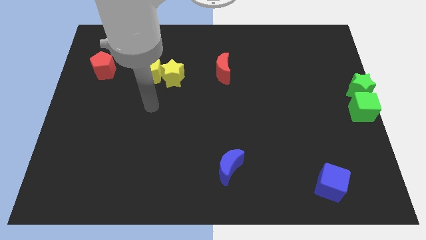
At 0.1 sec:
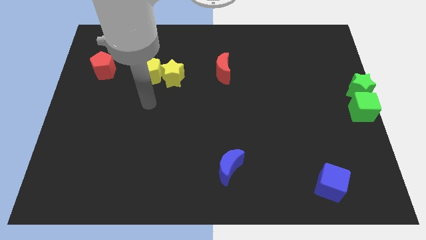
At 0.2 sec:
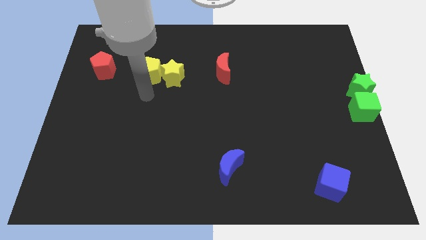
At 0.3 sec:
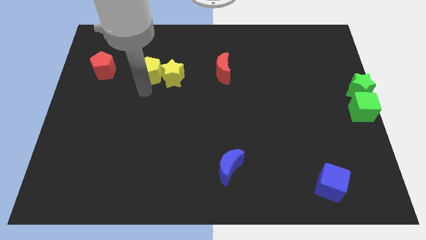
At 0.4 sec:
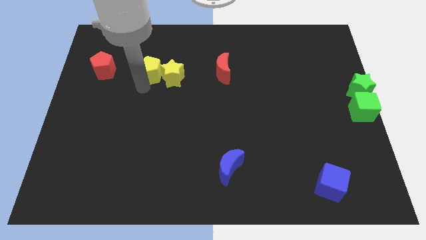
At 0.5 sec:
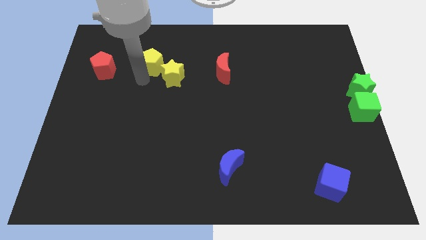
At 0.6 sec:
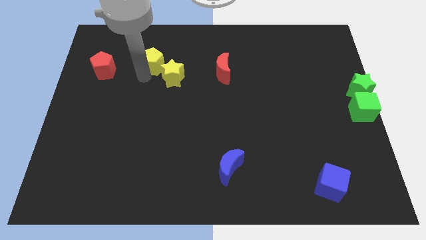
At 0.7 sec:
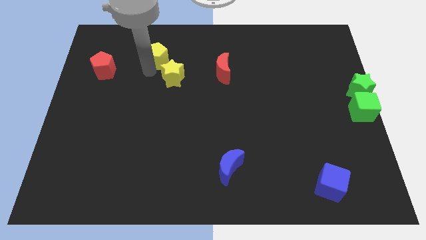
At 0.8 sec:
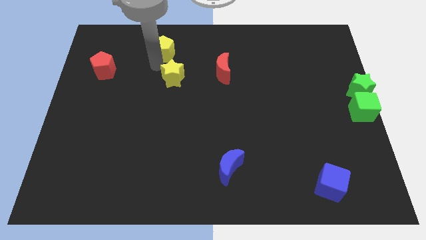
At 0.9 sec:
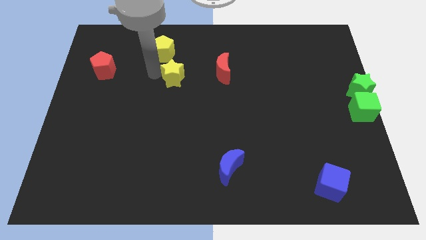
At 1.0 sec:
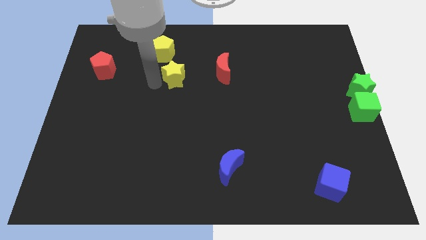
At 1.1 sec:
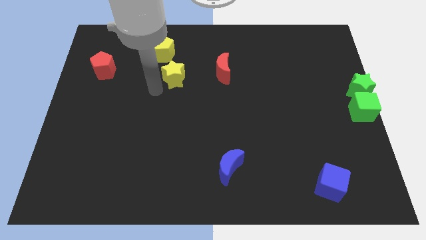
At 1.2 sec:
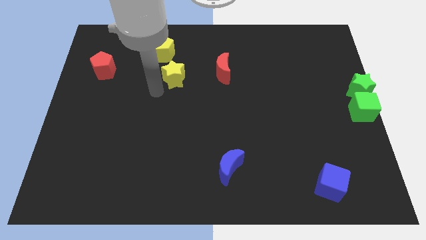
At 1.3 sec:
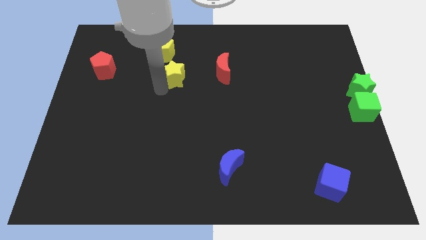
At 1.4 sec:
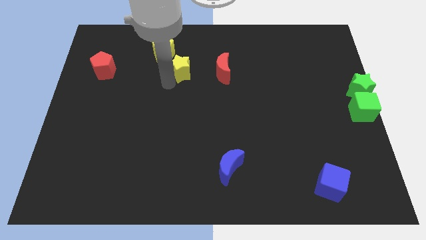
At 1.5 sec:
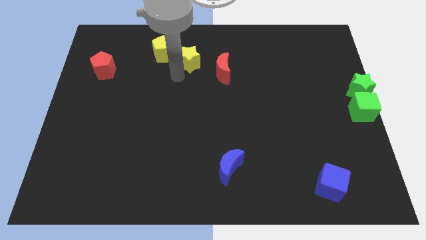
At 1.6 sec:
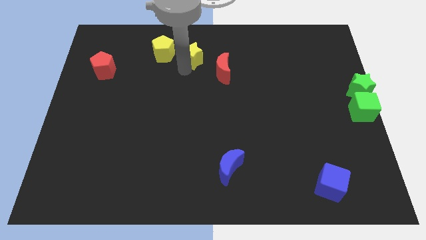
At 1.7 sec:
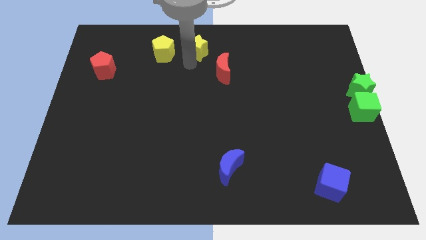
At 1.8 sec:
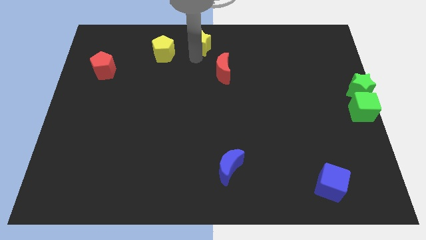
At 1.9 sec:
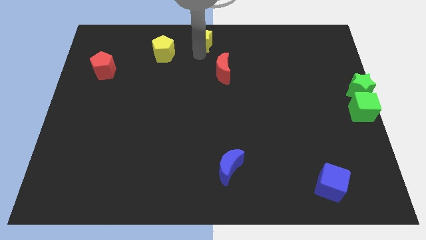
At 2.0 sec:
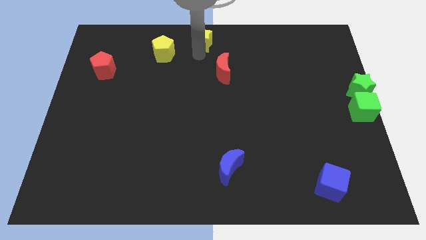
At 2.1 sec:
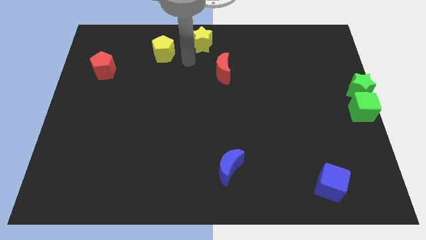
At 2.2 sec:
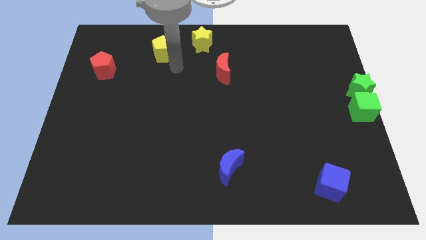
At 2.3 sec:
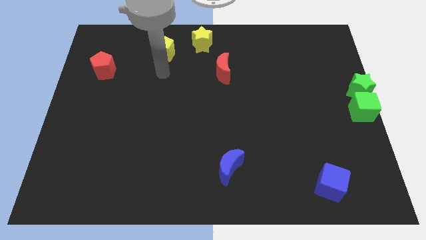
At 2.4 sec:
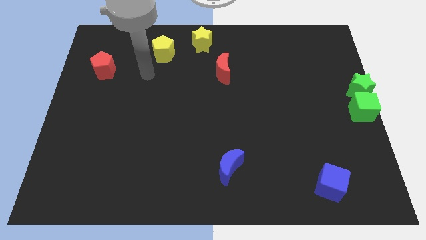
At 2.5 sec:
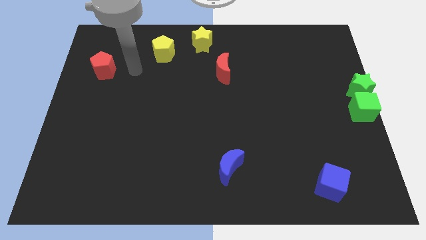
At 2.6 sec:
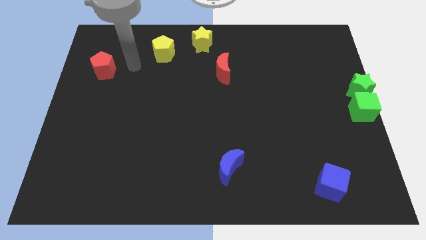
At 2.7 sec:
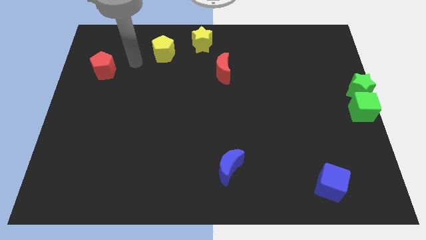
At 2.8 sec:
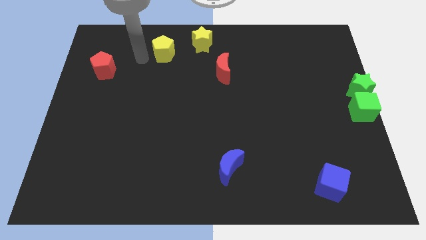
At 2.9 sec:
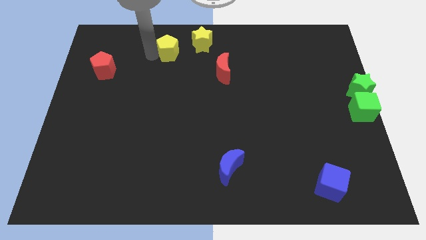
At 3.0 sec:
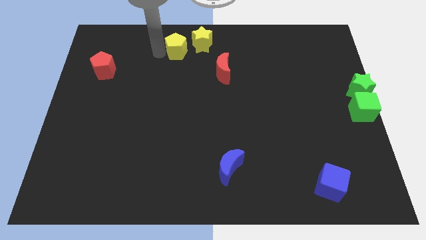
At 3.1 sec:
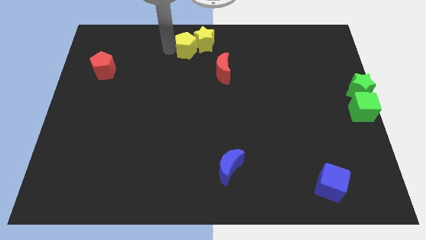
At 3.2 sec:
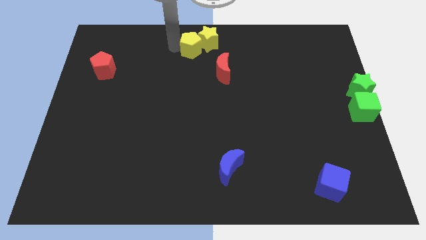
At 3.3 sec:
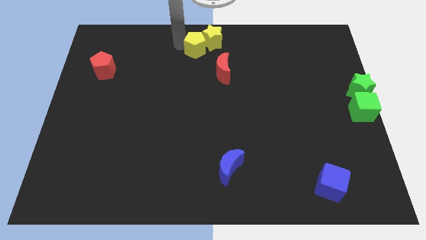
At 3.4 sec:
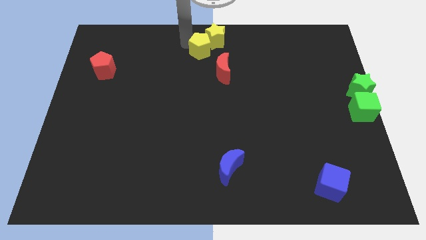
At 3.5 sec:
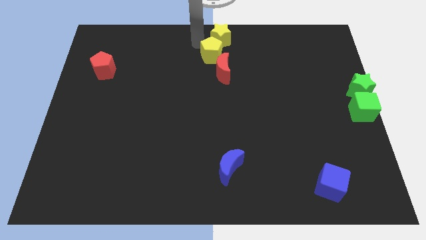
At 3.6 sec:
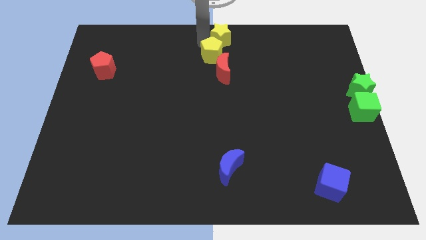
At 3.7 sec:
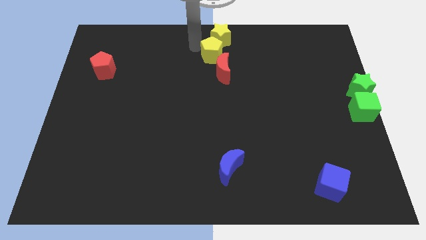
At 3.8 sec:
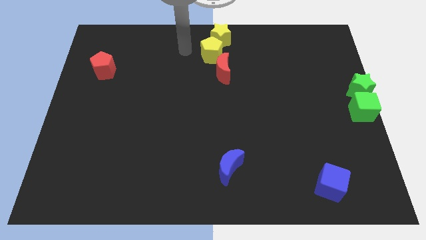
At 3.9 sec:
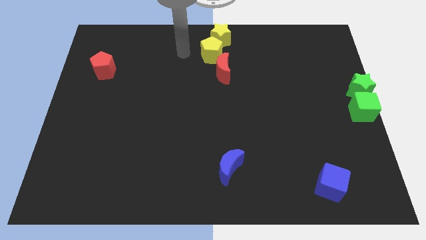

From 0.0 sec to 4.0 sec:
push the yellow star and yellow pentagon to the top center

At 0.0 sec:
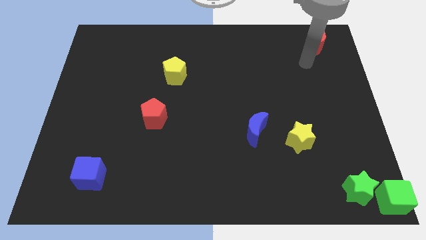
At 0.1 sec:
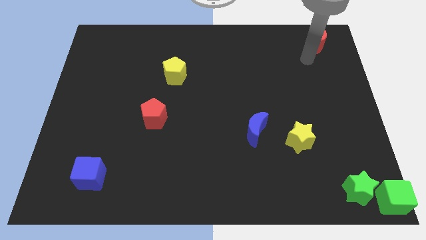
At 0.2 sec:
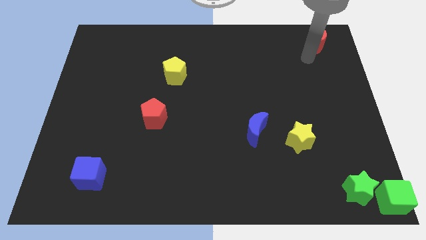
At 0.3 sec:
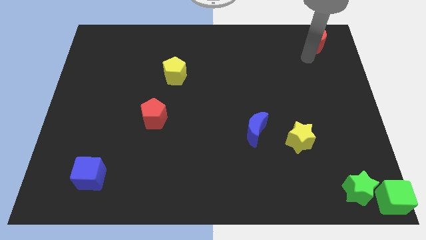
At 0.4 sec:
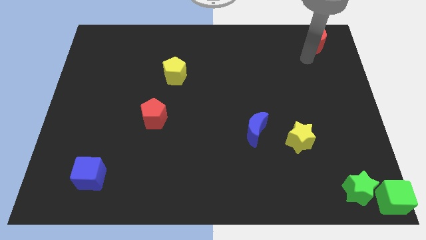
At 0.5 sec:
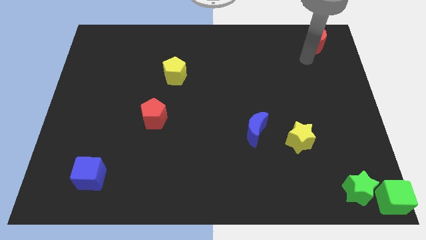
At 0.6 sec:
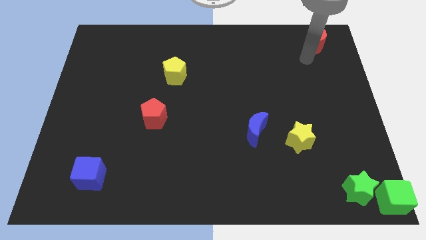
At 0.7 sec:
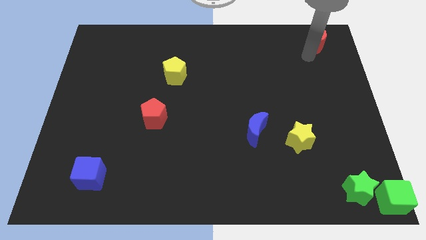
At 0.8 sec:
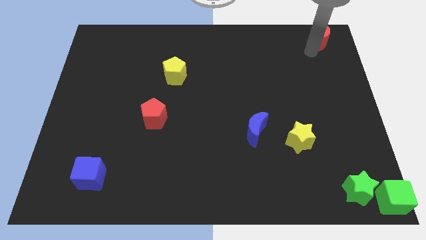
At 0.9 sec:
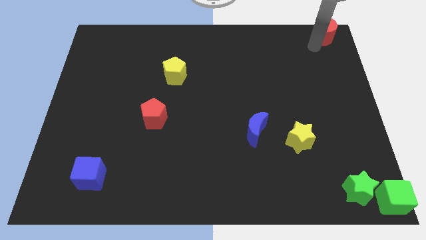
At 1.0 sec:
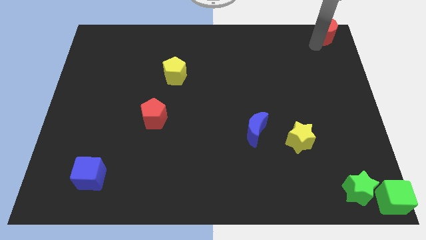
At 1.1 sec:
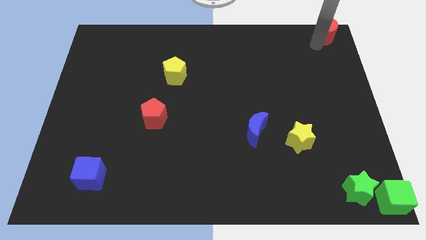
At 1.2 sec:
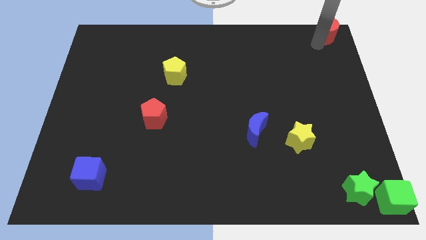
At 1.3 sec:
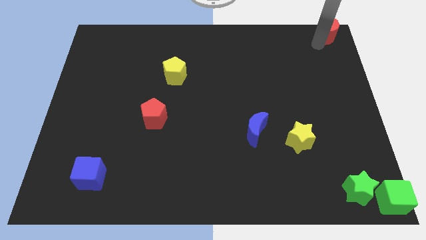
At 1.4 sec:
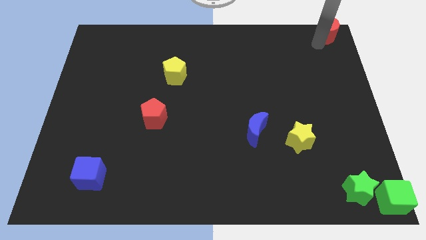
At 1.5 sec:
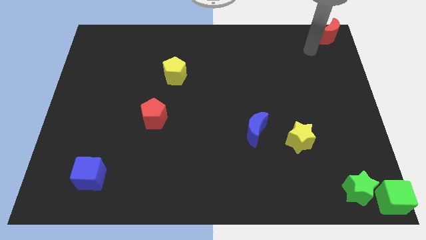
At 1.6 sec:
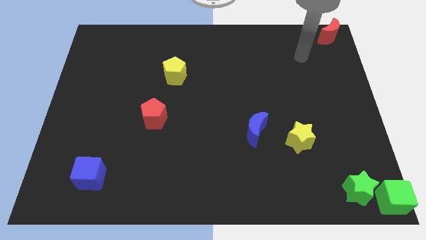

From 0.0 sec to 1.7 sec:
move the red crescent slightly towards the top right corner of the board

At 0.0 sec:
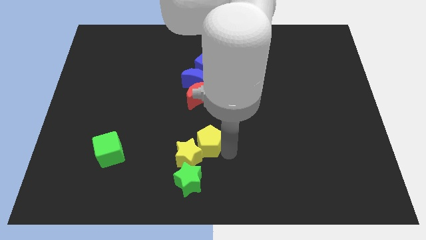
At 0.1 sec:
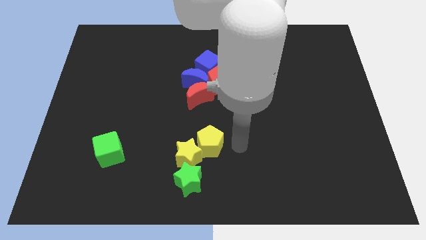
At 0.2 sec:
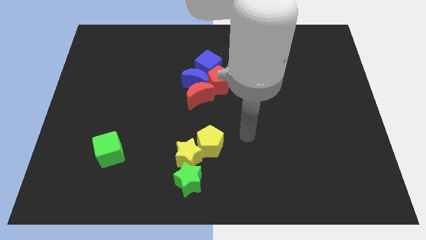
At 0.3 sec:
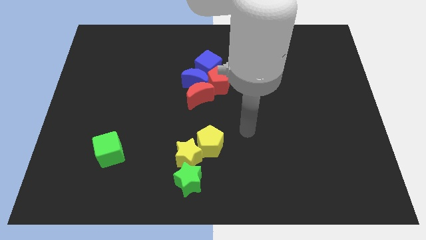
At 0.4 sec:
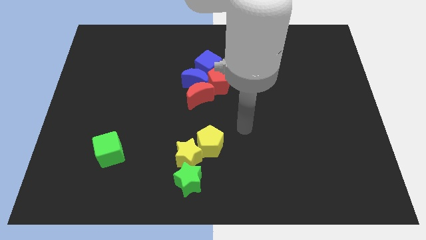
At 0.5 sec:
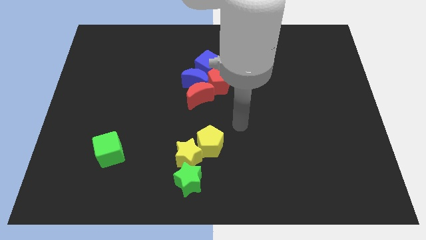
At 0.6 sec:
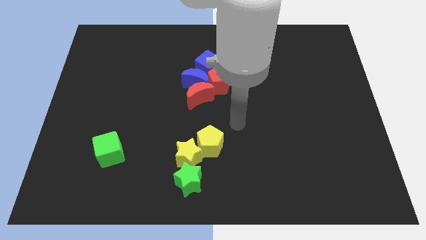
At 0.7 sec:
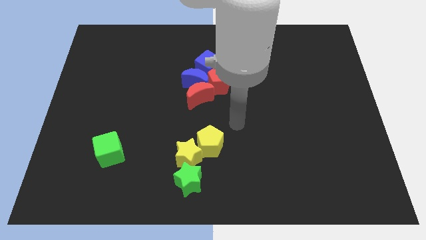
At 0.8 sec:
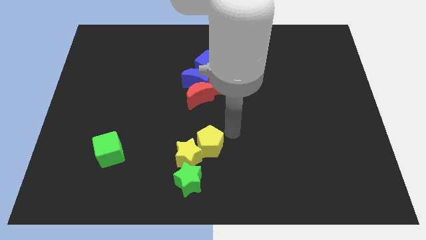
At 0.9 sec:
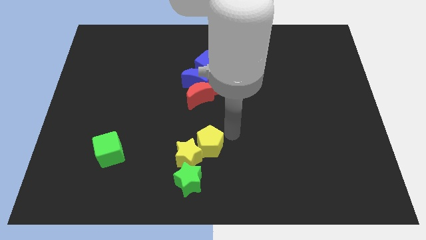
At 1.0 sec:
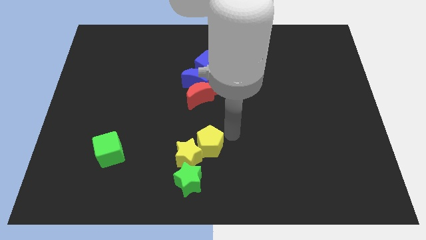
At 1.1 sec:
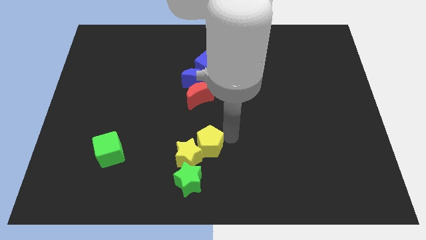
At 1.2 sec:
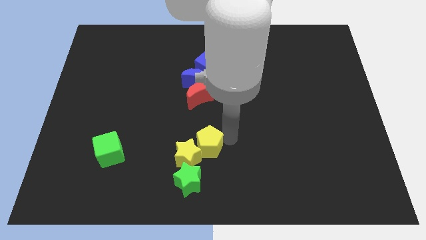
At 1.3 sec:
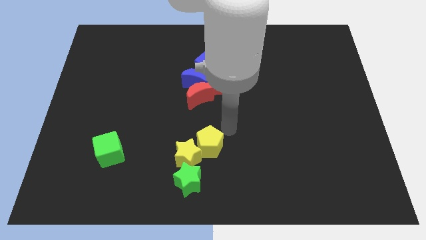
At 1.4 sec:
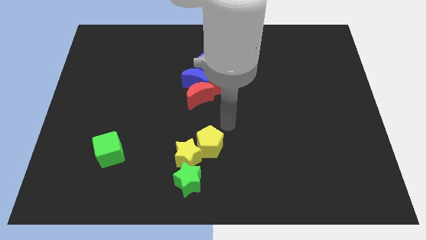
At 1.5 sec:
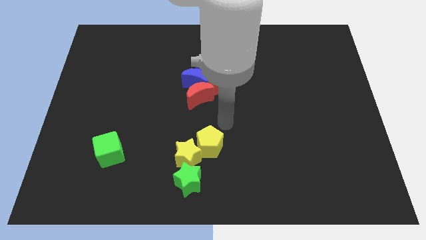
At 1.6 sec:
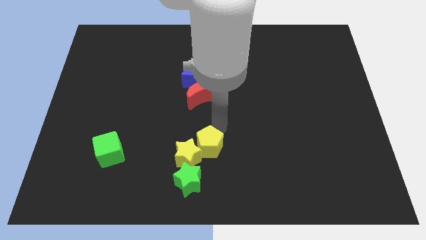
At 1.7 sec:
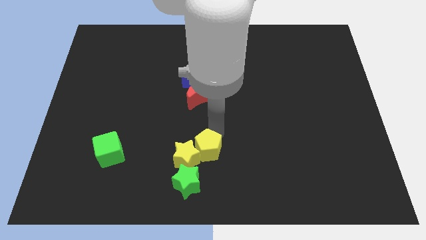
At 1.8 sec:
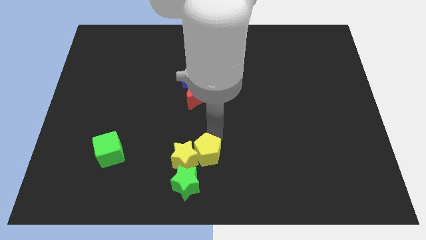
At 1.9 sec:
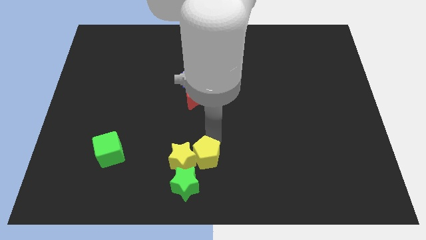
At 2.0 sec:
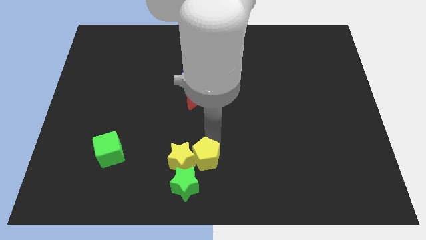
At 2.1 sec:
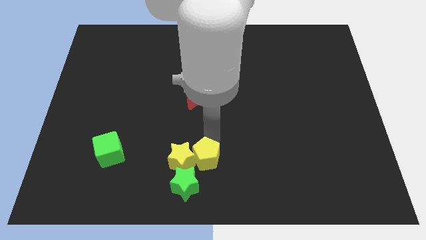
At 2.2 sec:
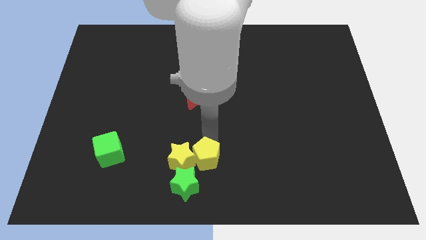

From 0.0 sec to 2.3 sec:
slightly push the yellow pentagon towards down

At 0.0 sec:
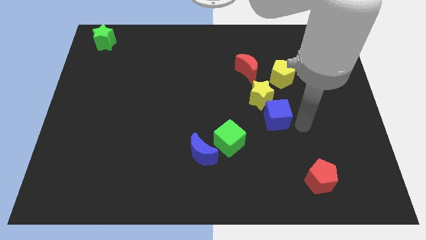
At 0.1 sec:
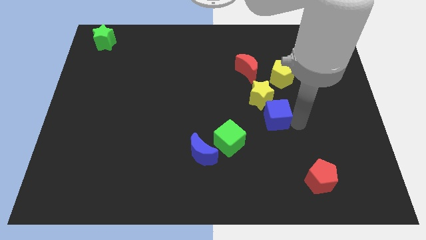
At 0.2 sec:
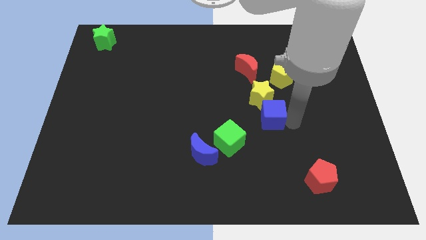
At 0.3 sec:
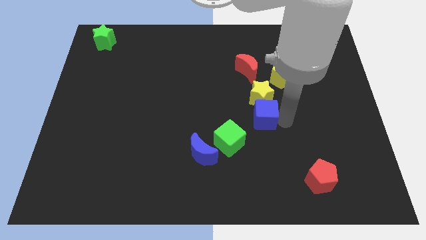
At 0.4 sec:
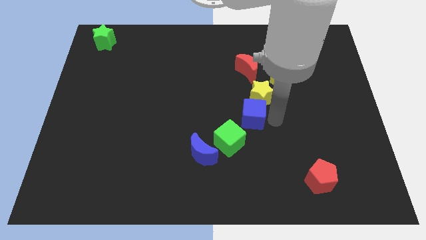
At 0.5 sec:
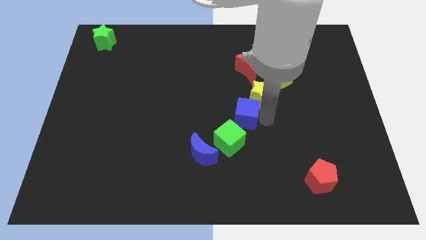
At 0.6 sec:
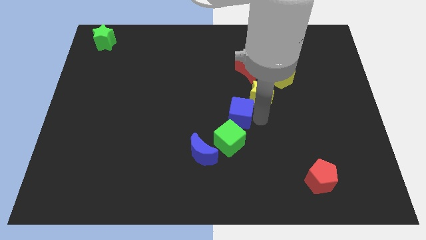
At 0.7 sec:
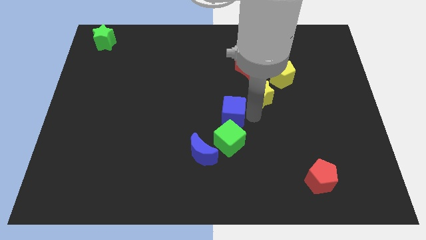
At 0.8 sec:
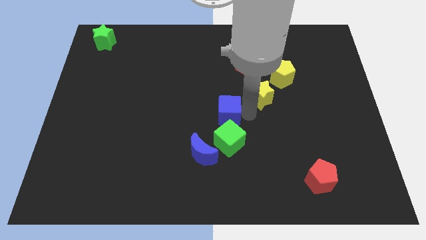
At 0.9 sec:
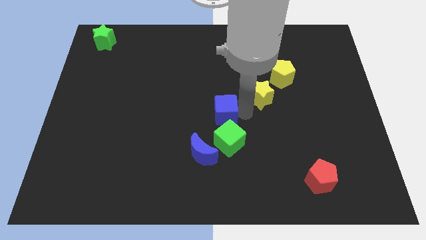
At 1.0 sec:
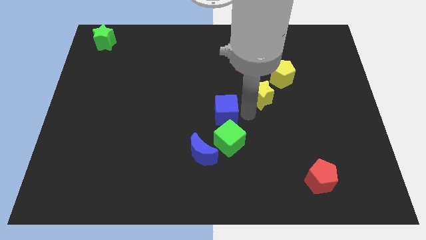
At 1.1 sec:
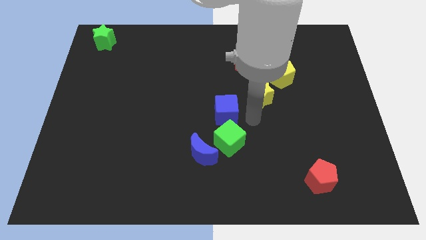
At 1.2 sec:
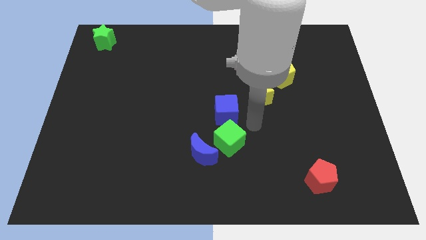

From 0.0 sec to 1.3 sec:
push the blue cube vertically above the green cube
